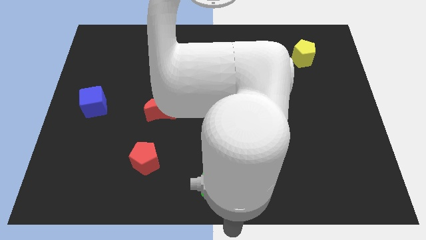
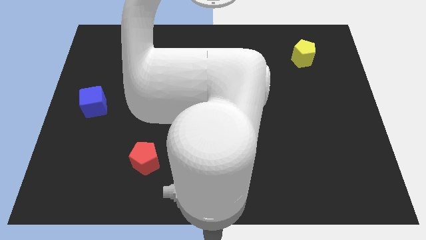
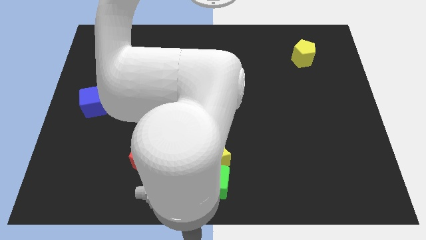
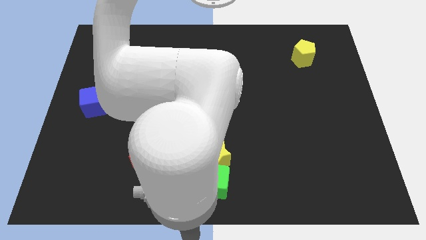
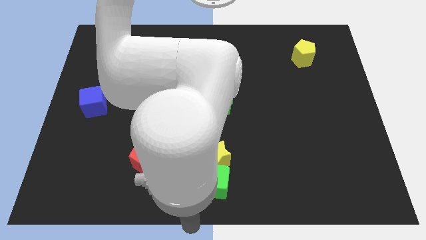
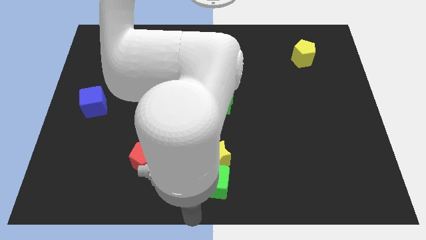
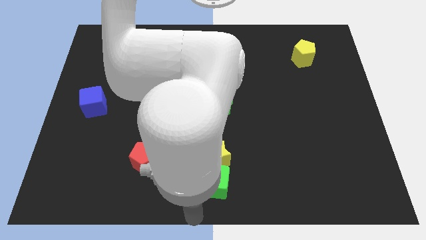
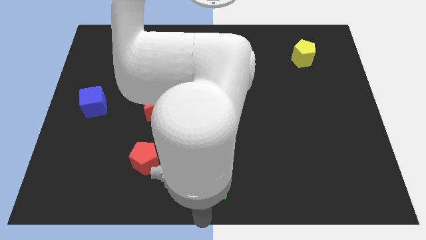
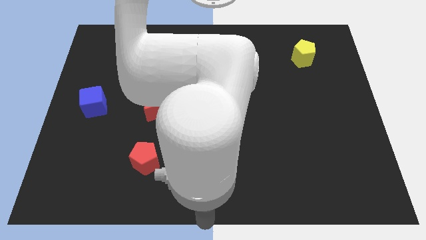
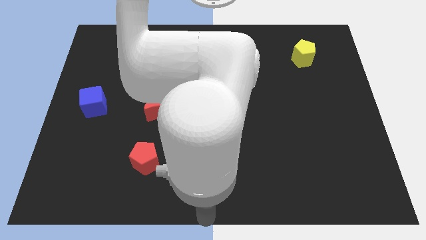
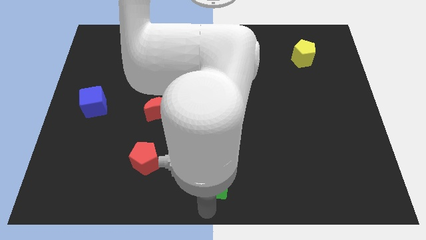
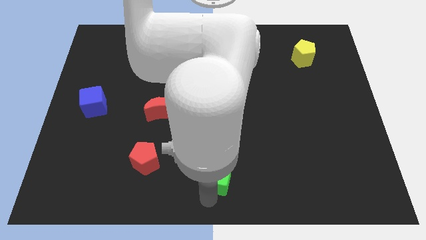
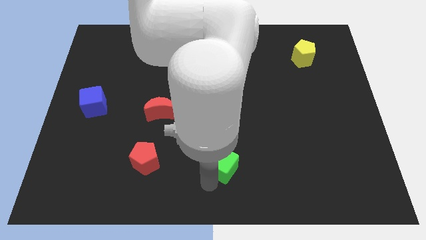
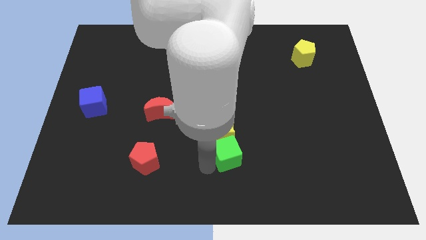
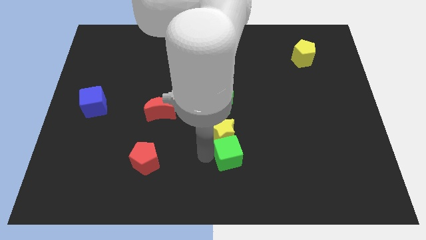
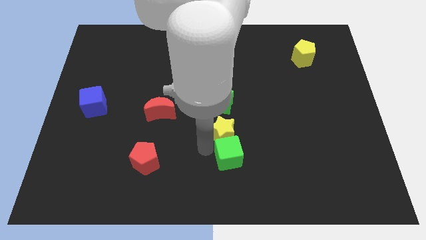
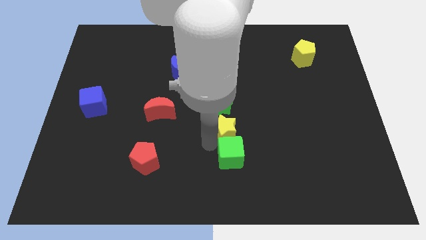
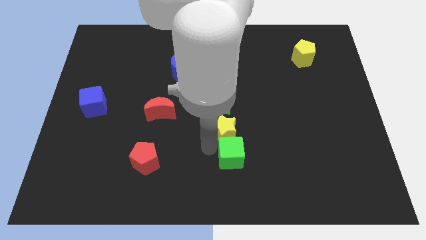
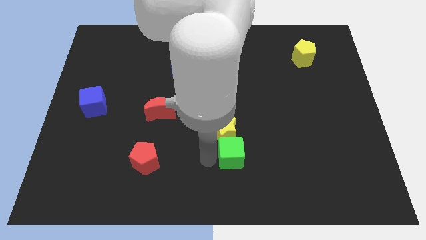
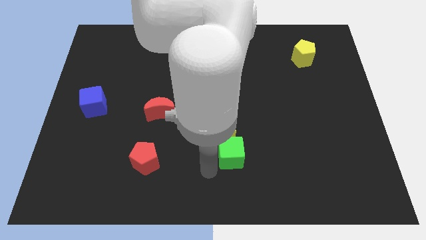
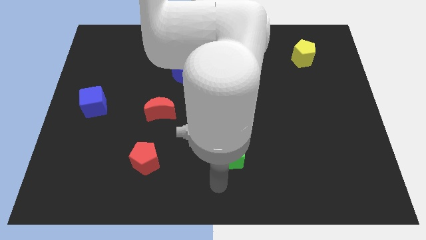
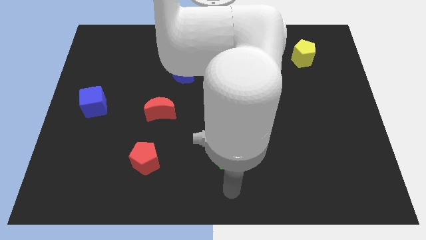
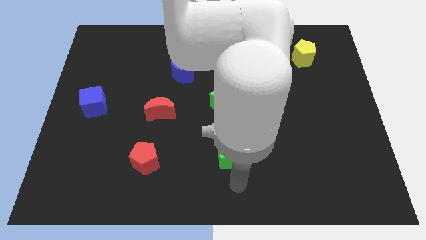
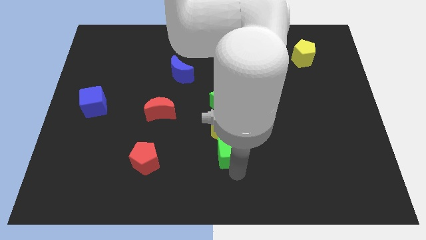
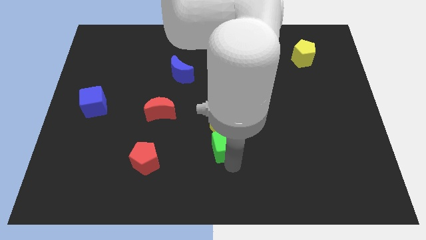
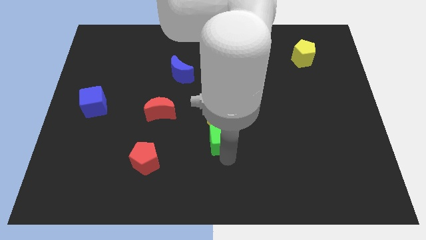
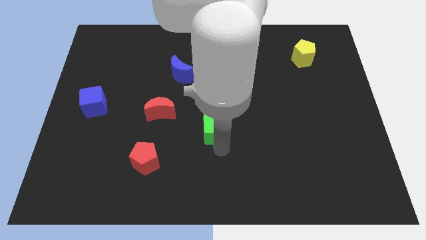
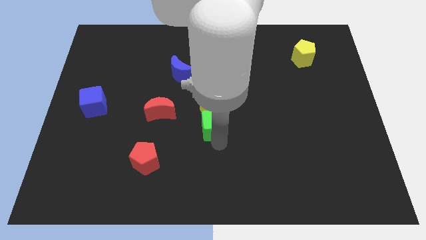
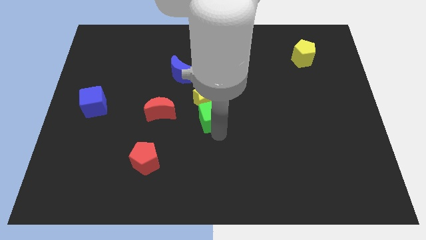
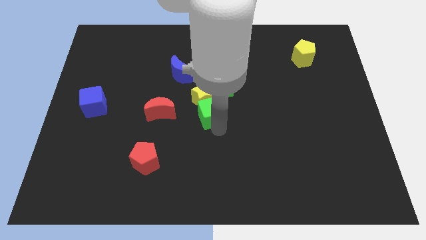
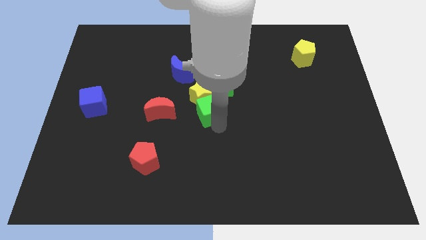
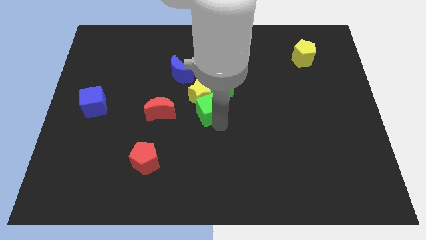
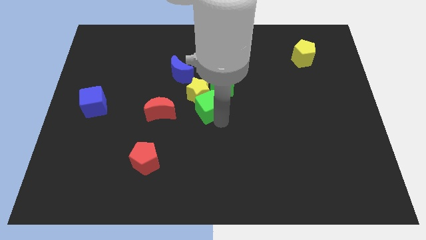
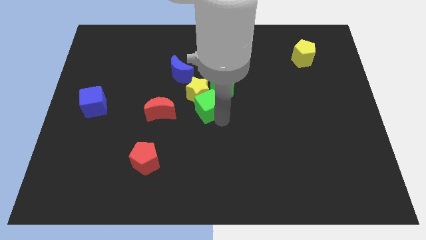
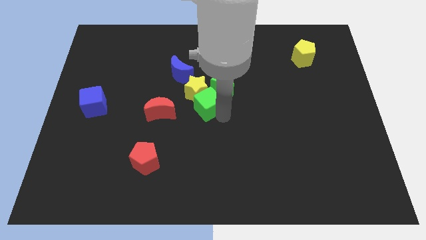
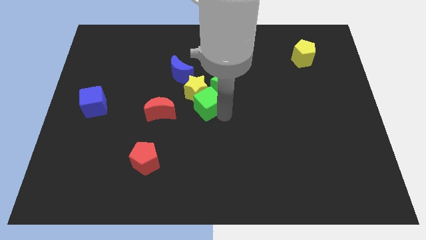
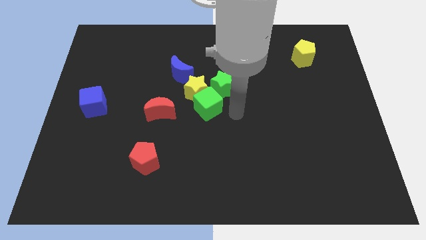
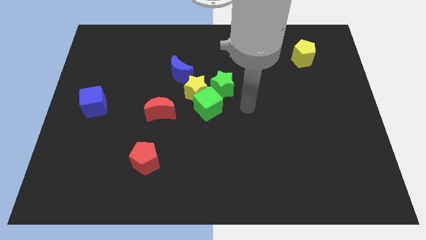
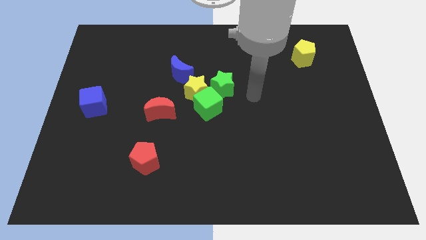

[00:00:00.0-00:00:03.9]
push the green cube towards the yellow star

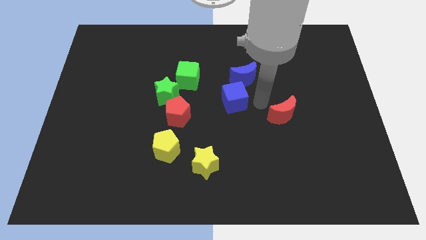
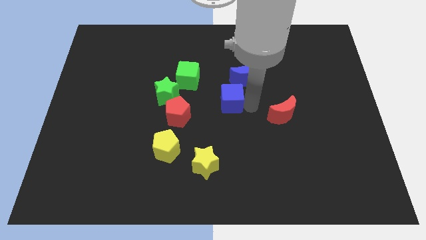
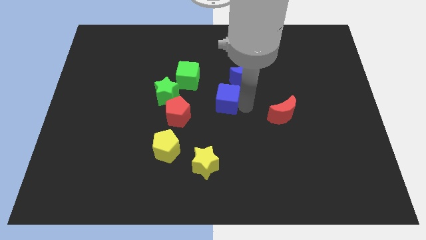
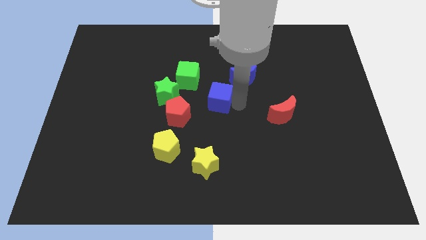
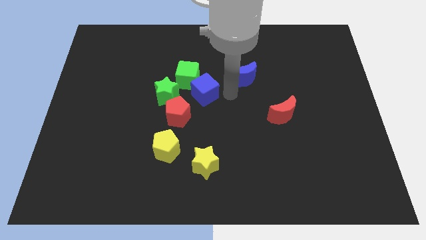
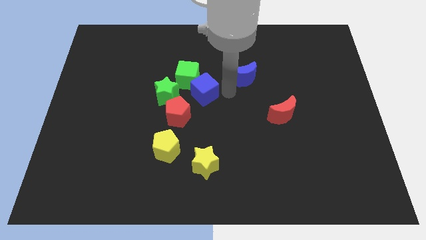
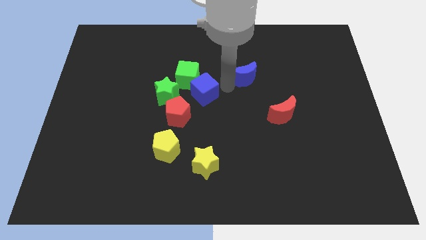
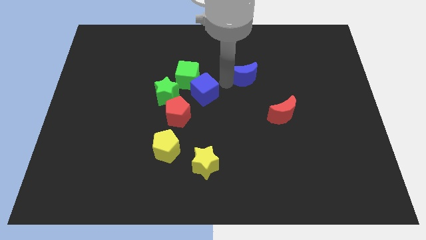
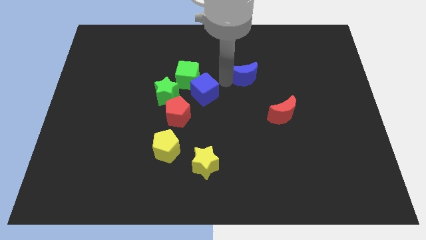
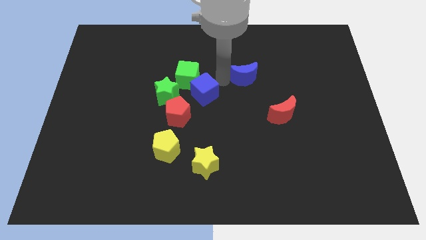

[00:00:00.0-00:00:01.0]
place blue cube diagonally to th green cube

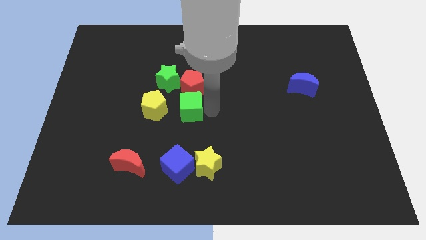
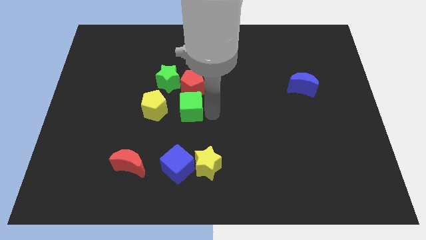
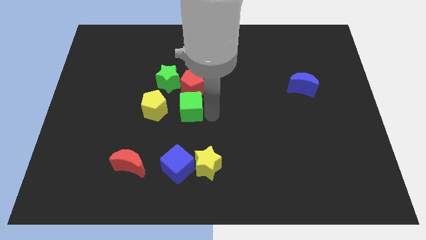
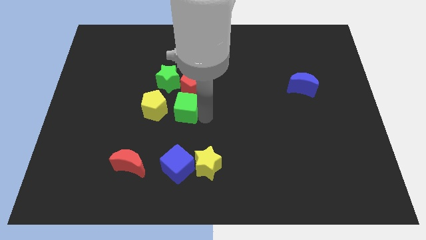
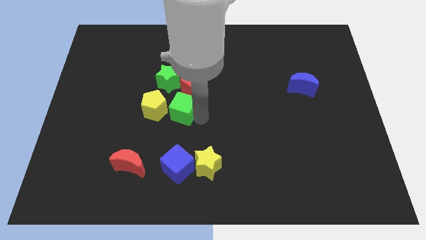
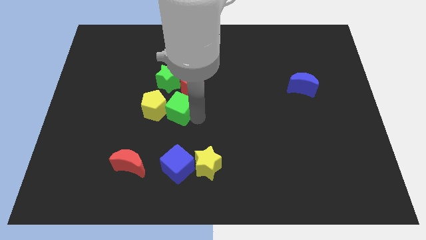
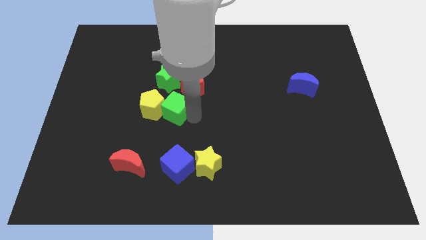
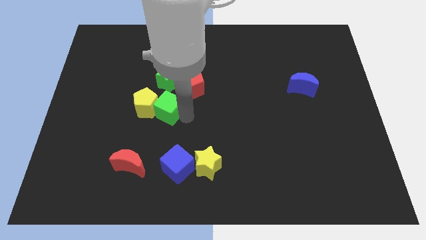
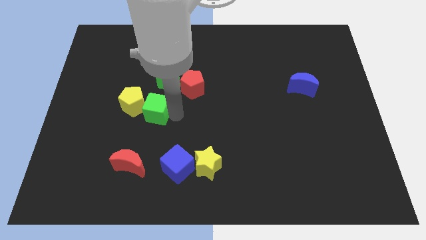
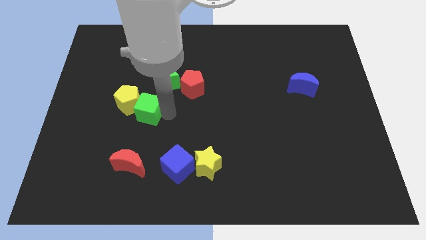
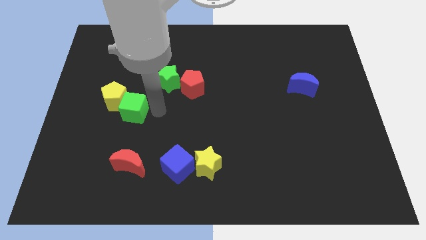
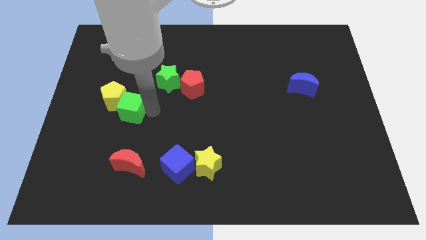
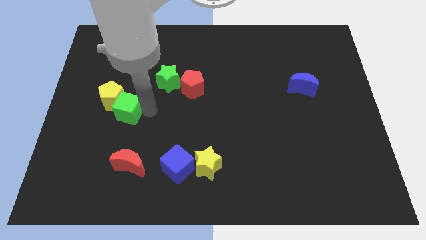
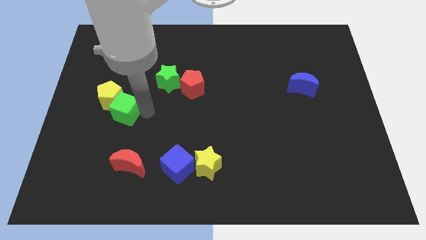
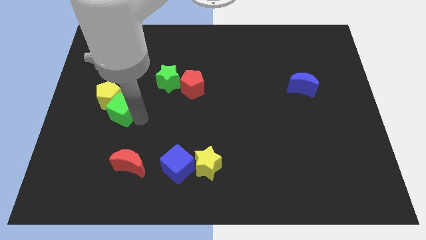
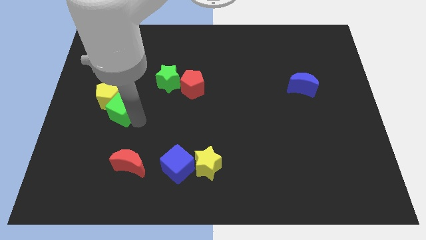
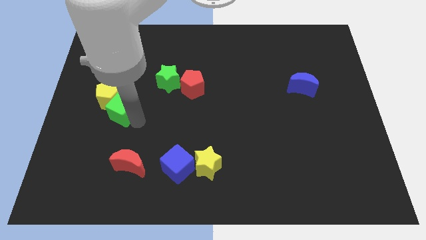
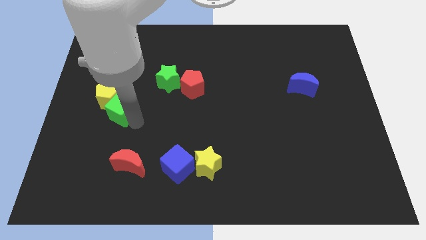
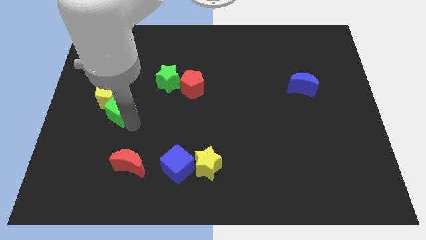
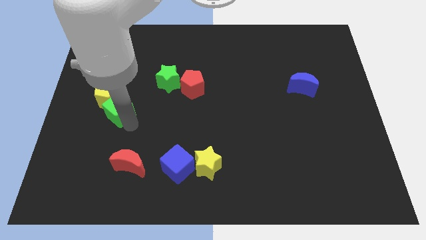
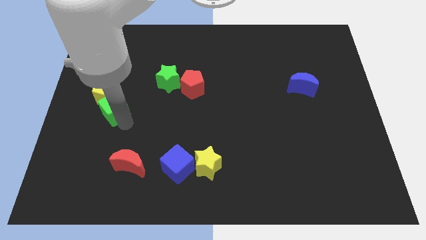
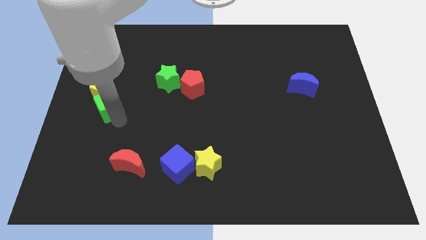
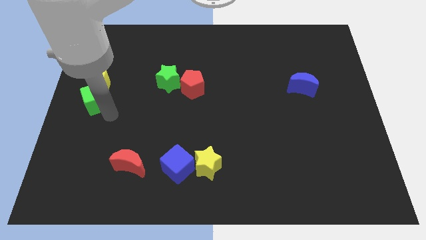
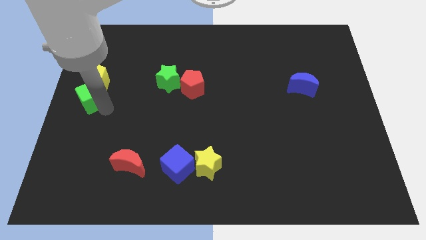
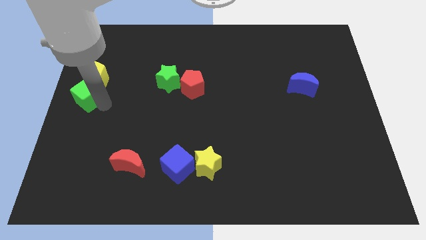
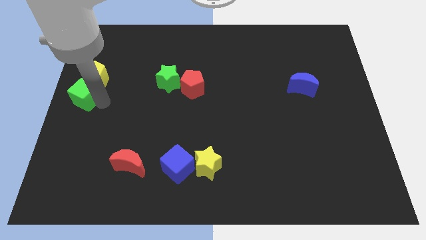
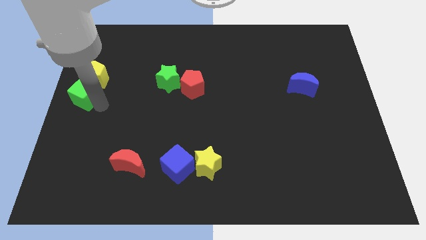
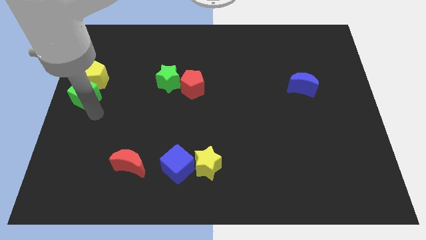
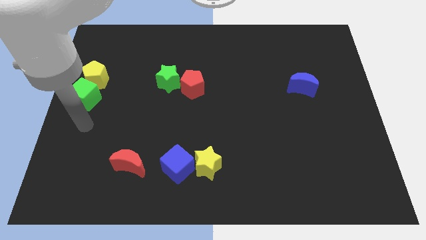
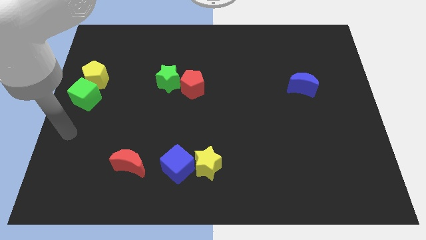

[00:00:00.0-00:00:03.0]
push the yellow pentagon and green cube to the center left

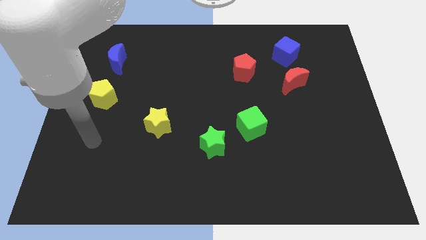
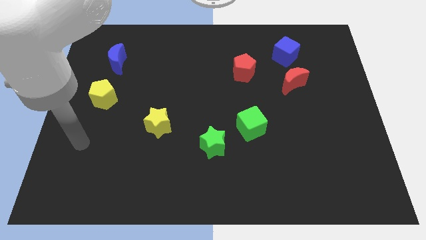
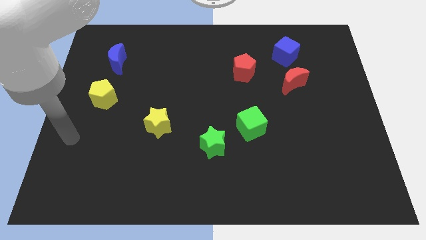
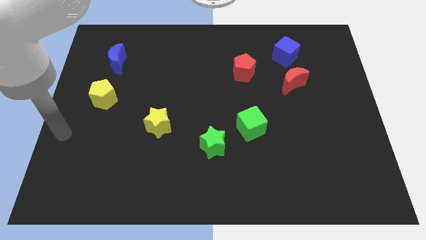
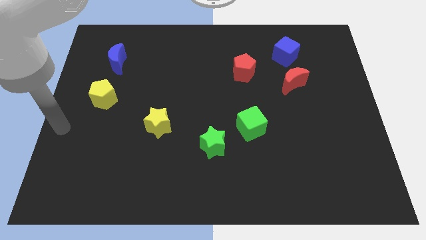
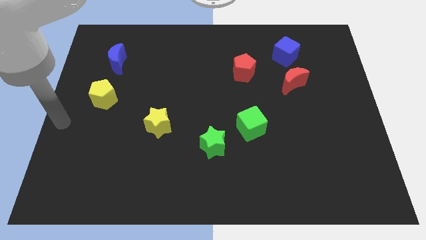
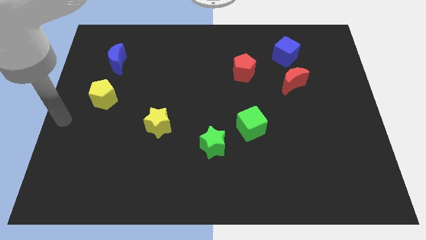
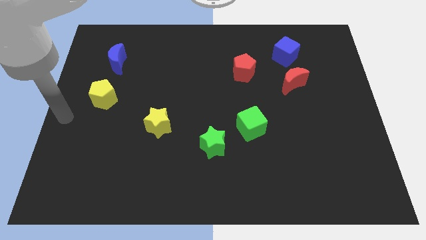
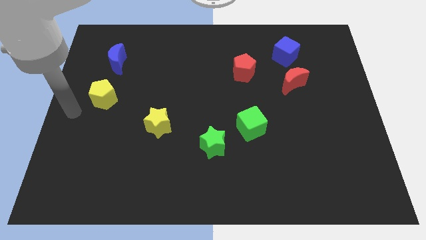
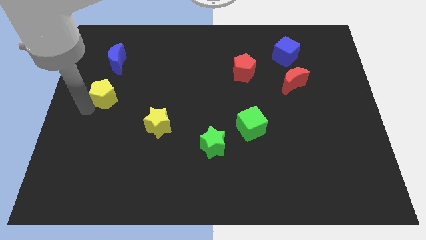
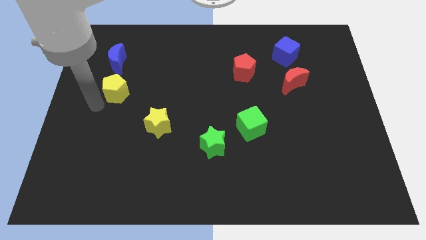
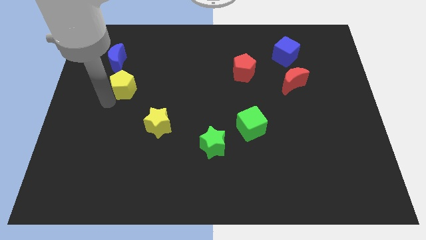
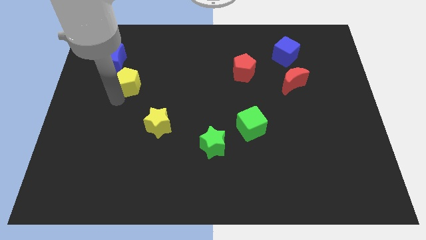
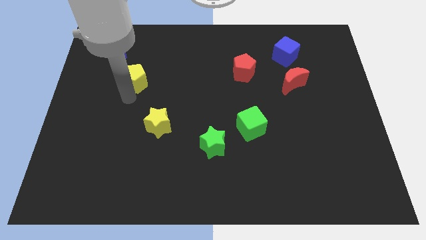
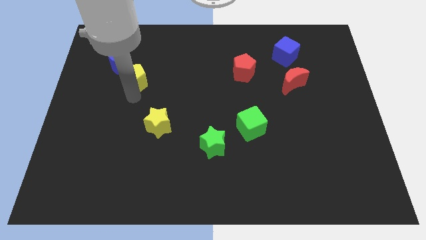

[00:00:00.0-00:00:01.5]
push the yellow pentagon to the bottom right side of the blue crescent
